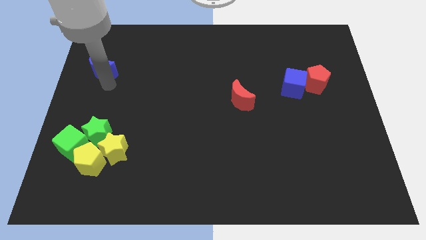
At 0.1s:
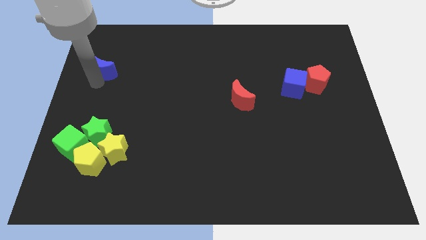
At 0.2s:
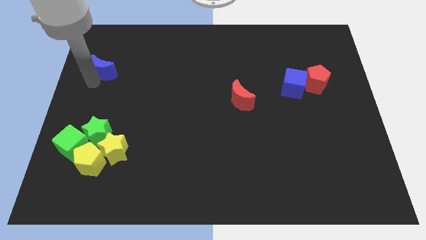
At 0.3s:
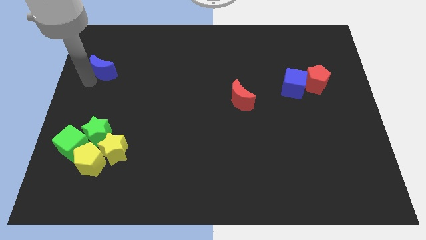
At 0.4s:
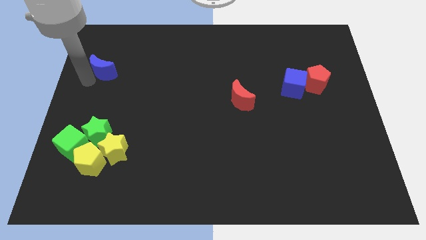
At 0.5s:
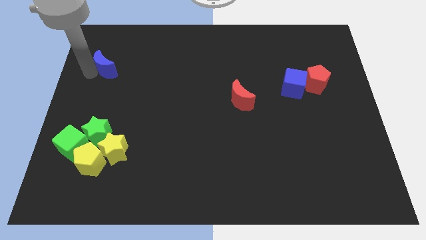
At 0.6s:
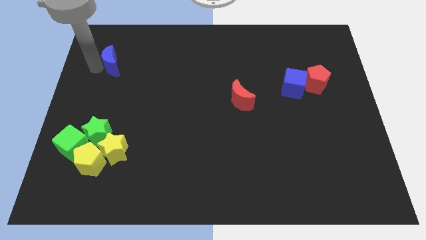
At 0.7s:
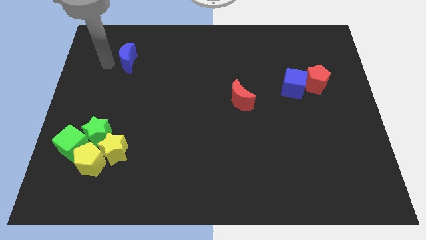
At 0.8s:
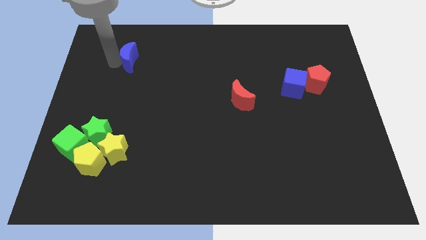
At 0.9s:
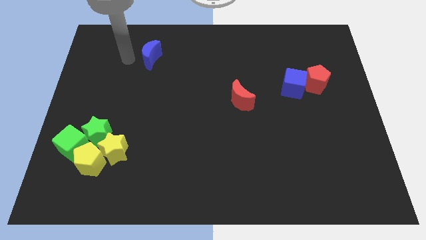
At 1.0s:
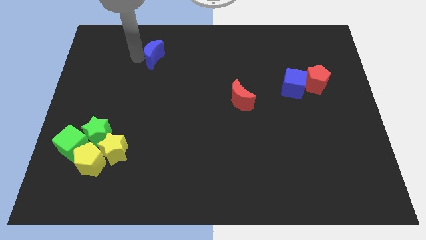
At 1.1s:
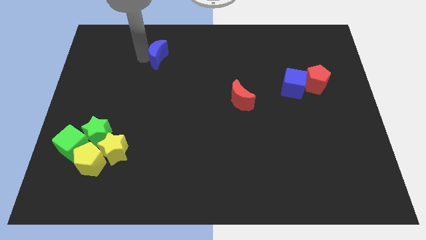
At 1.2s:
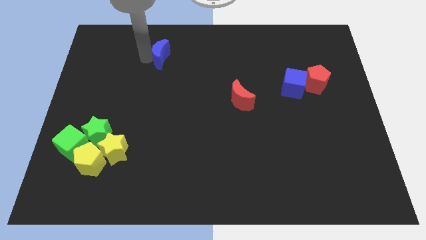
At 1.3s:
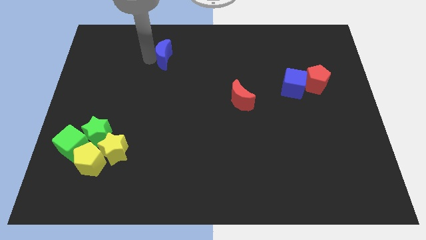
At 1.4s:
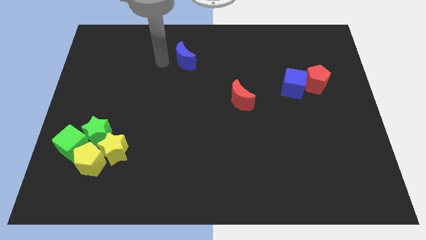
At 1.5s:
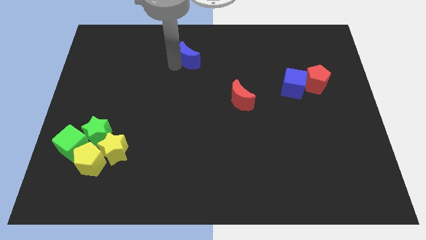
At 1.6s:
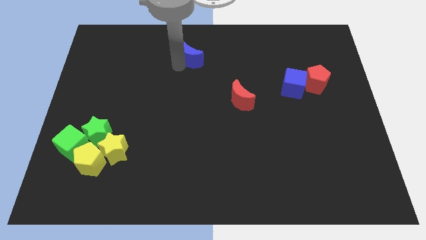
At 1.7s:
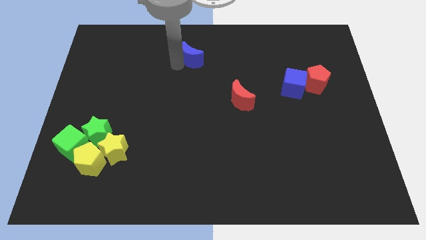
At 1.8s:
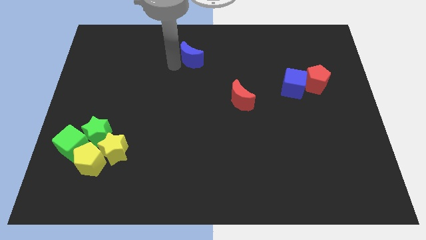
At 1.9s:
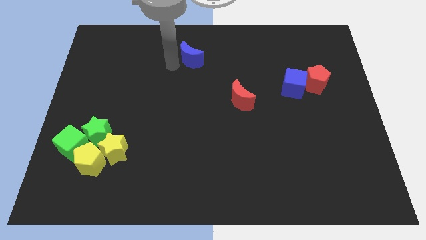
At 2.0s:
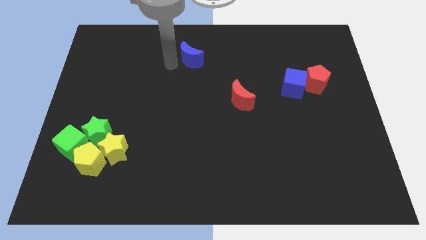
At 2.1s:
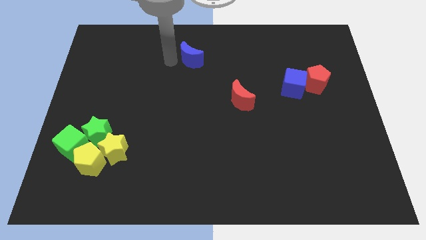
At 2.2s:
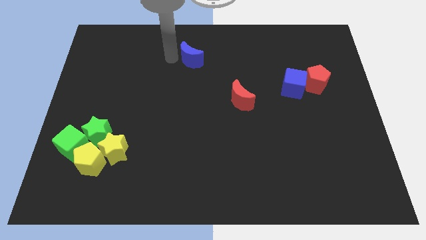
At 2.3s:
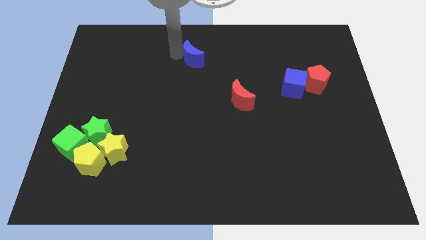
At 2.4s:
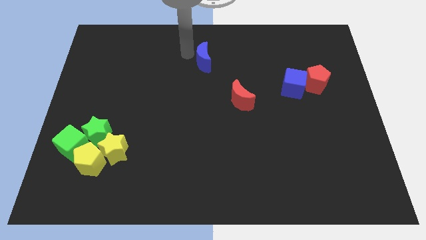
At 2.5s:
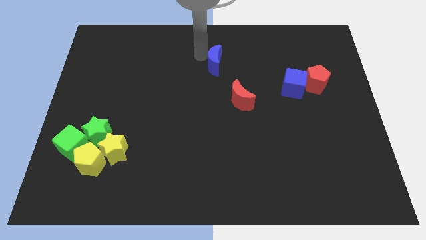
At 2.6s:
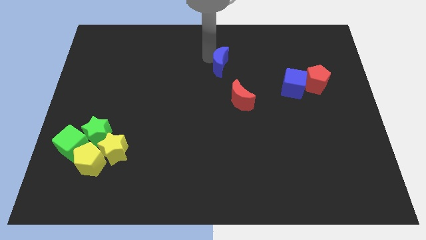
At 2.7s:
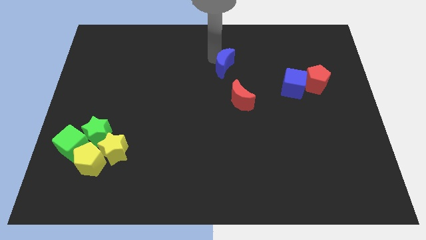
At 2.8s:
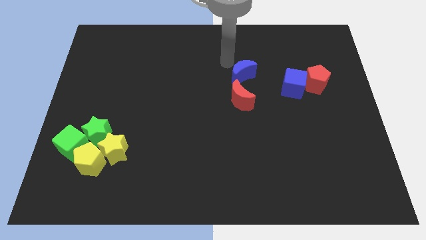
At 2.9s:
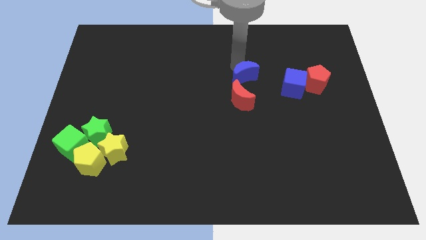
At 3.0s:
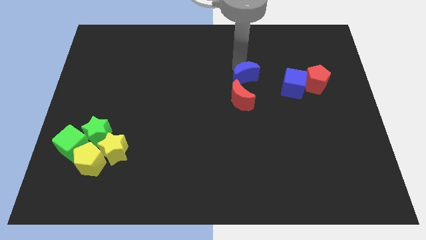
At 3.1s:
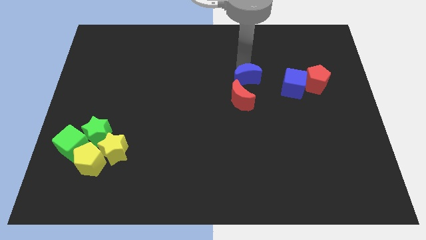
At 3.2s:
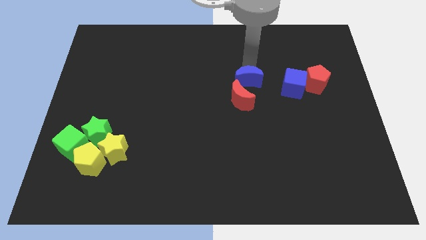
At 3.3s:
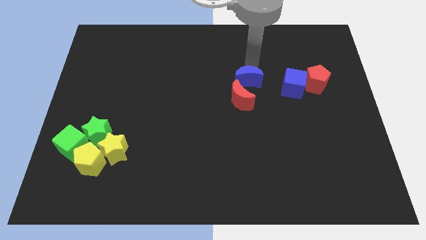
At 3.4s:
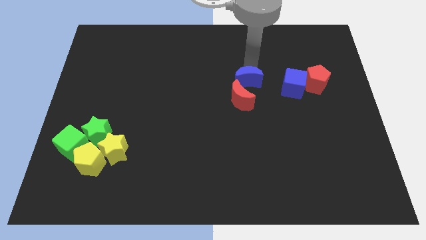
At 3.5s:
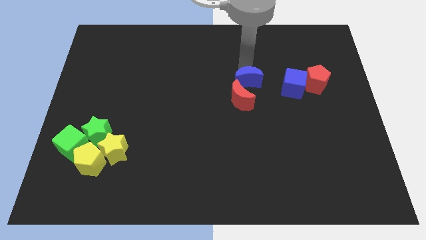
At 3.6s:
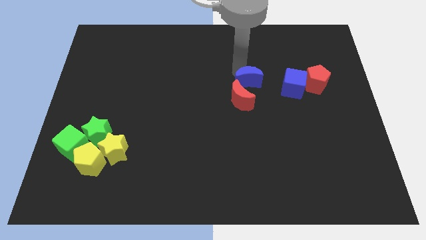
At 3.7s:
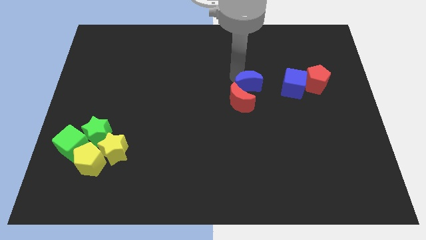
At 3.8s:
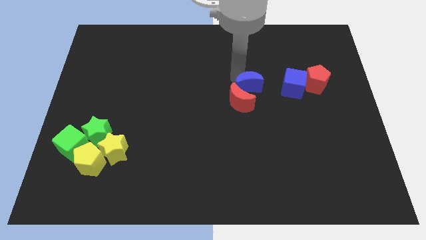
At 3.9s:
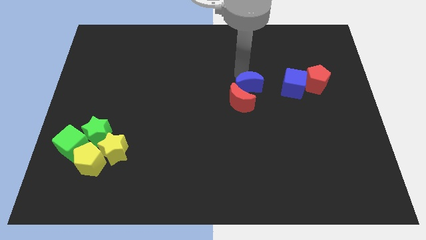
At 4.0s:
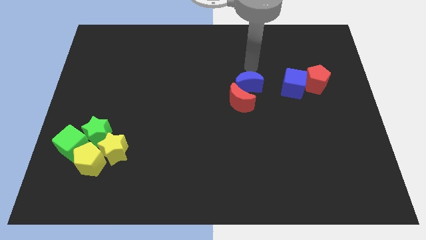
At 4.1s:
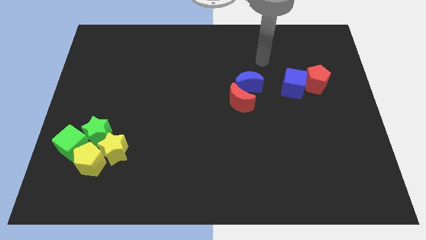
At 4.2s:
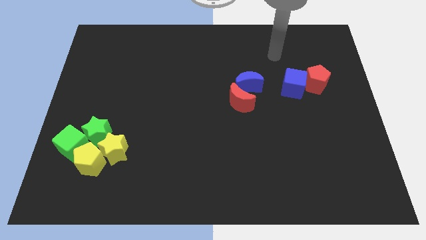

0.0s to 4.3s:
move the blue crescent into the red crescent

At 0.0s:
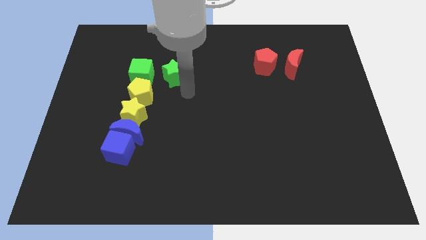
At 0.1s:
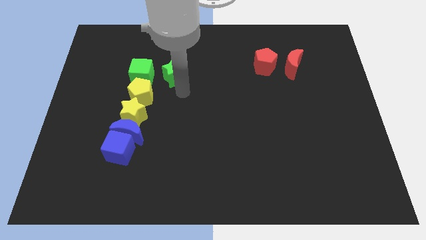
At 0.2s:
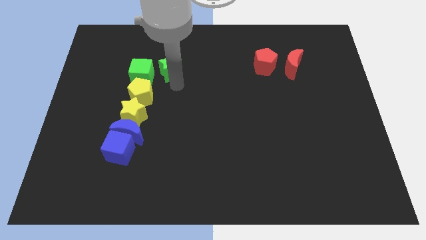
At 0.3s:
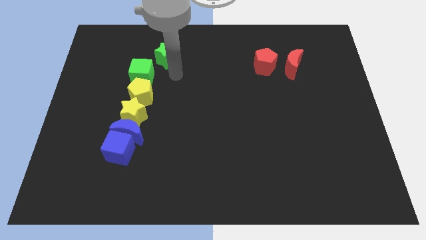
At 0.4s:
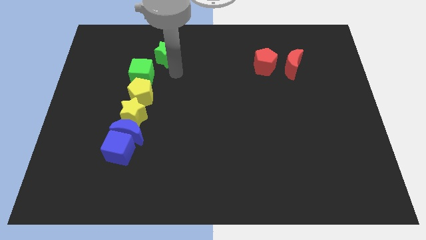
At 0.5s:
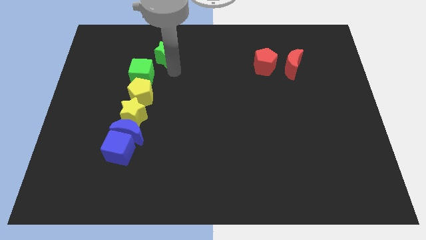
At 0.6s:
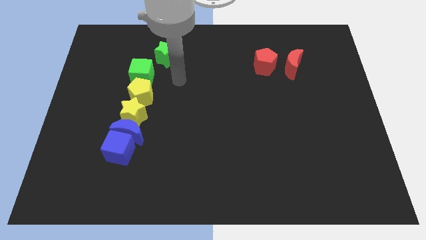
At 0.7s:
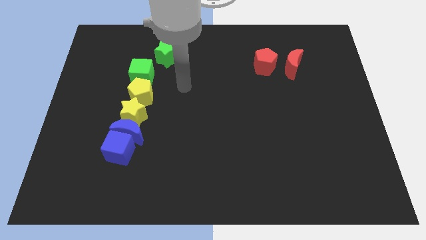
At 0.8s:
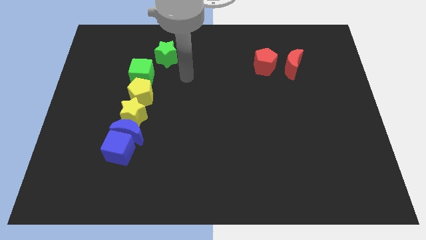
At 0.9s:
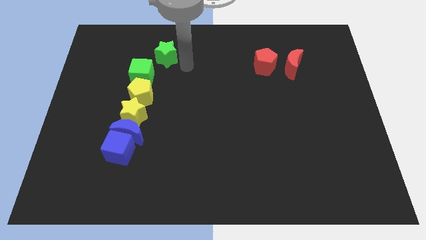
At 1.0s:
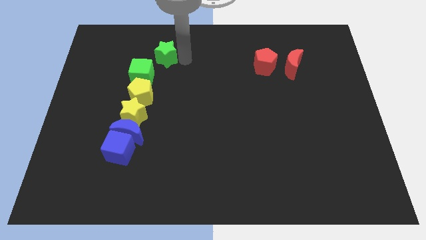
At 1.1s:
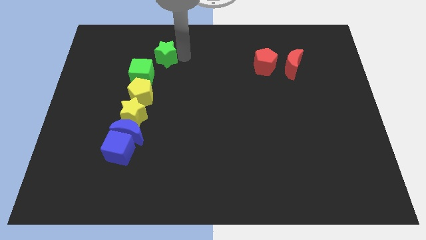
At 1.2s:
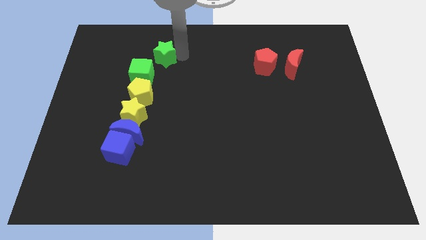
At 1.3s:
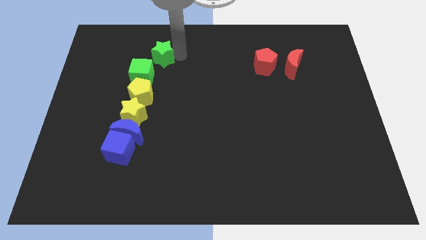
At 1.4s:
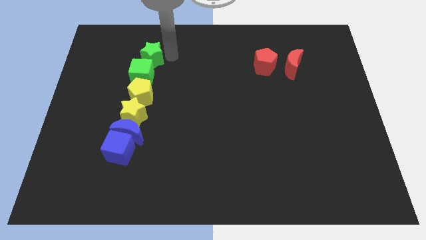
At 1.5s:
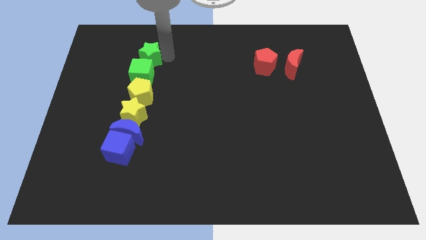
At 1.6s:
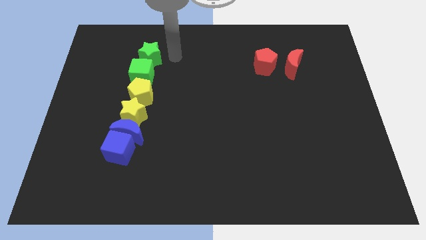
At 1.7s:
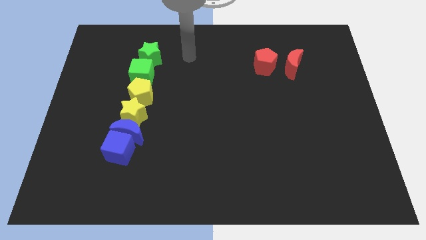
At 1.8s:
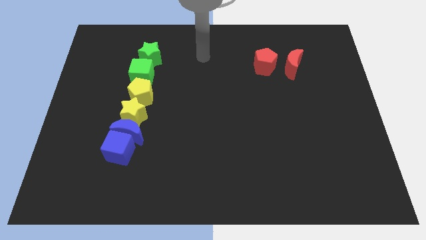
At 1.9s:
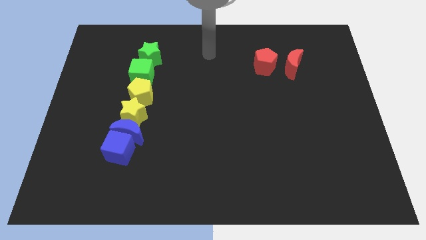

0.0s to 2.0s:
place the green star towards the top of the green cube

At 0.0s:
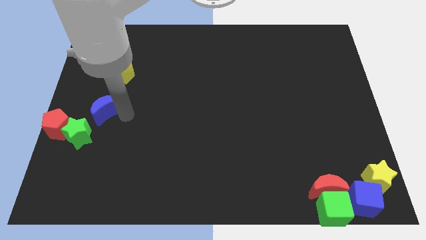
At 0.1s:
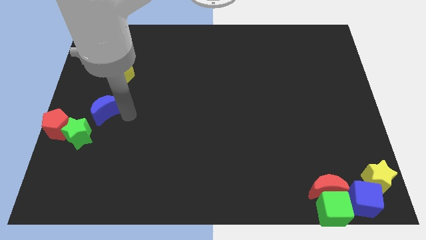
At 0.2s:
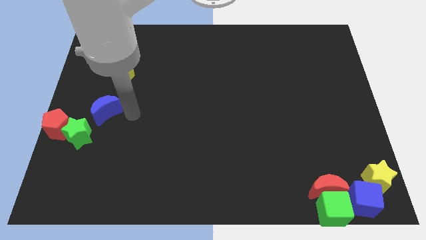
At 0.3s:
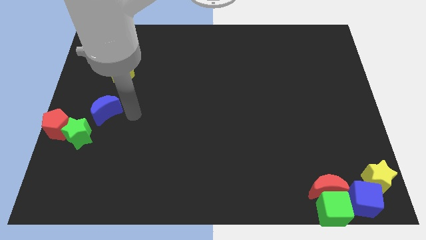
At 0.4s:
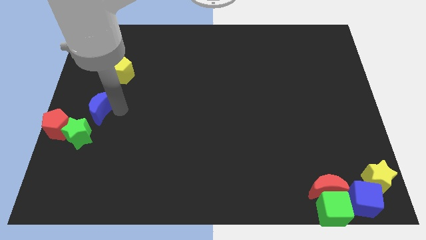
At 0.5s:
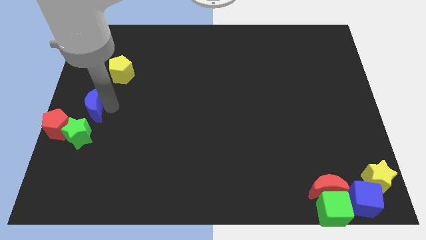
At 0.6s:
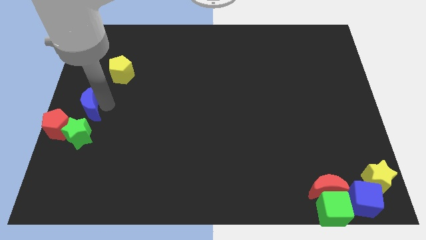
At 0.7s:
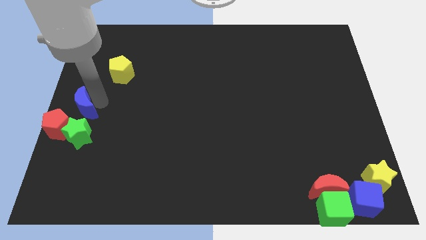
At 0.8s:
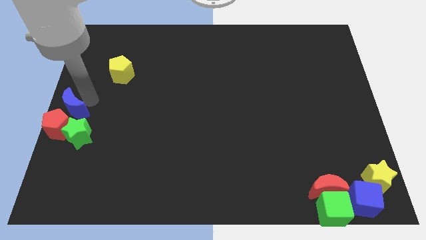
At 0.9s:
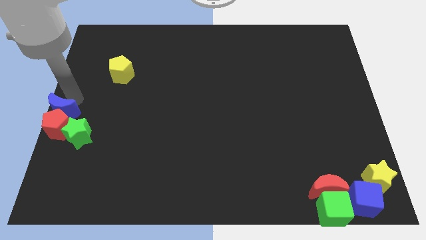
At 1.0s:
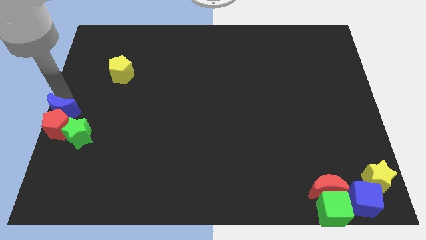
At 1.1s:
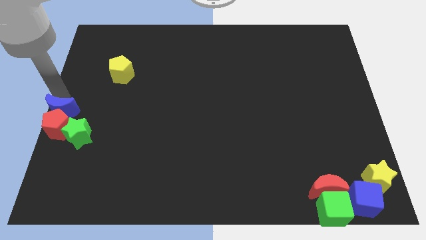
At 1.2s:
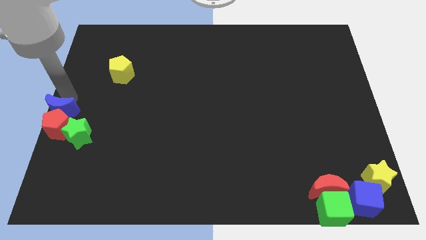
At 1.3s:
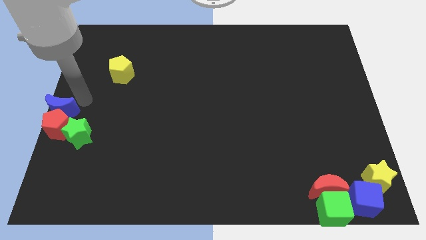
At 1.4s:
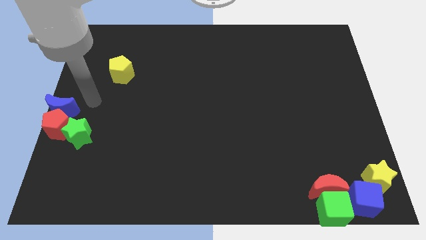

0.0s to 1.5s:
push the blue crescent to the top of the red pentagon

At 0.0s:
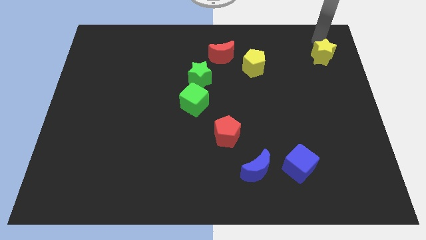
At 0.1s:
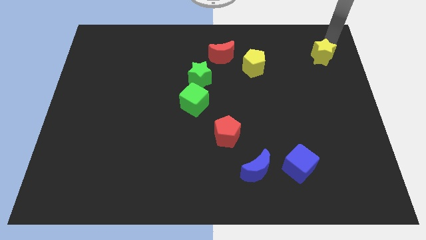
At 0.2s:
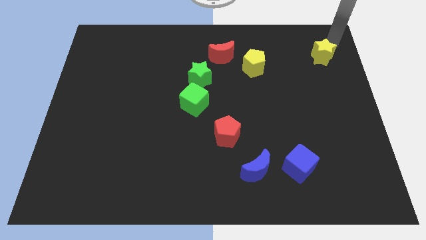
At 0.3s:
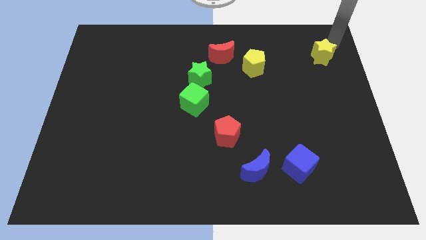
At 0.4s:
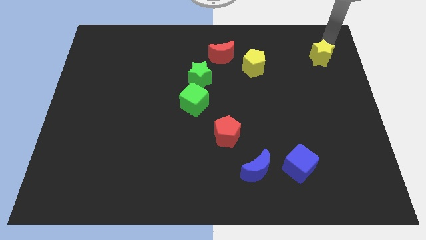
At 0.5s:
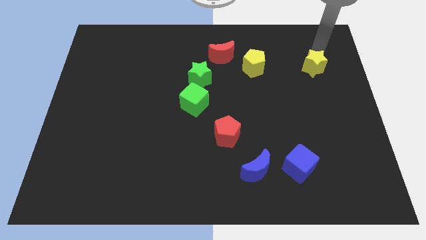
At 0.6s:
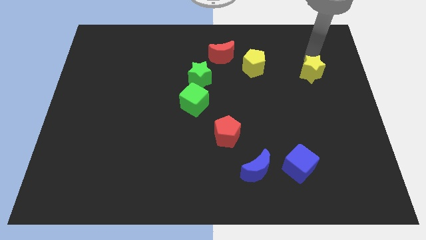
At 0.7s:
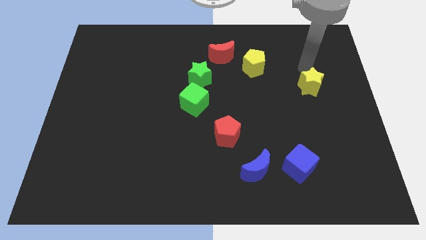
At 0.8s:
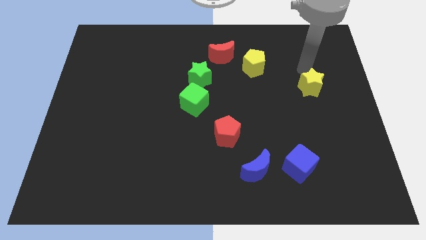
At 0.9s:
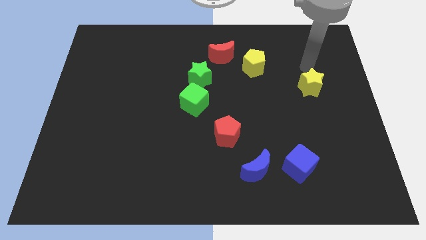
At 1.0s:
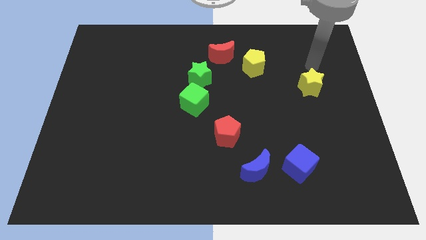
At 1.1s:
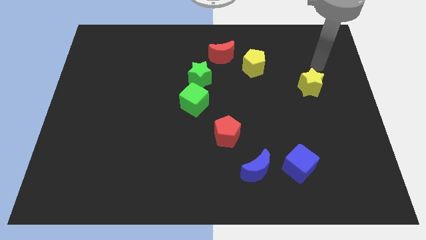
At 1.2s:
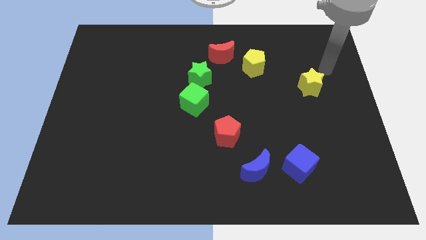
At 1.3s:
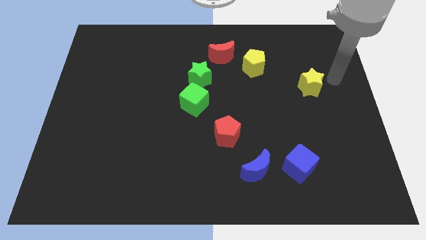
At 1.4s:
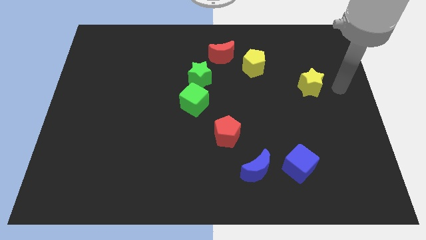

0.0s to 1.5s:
move the yellow stat diagonally on the bottom right side of the yellow pentagon
